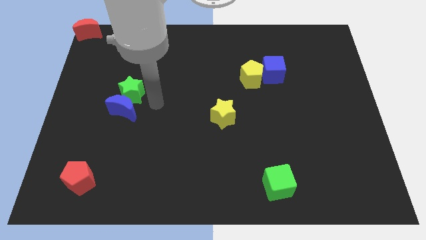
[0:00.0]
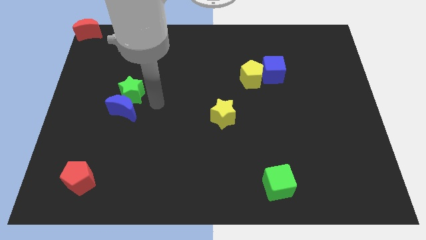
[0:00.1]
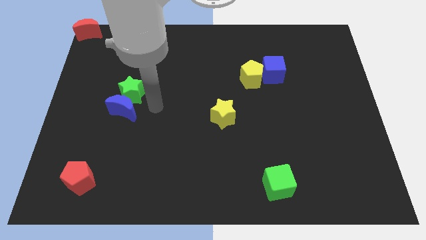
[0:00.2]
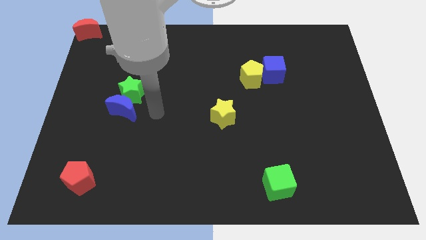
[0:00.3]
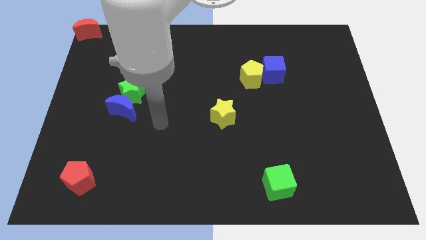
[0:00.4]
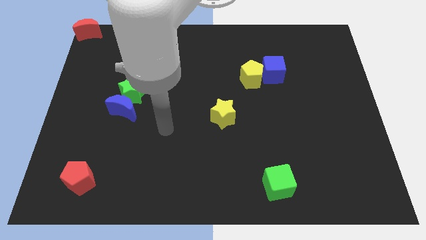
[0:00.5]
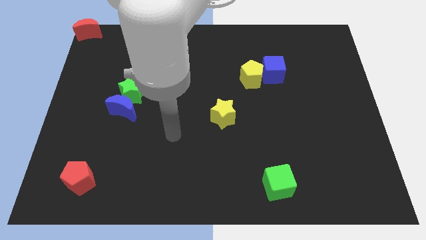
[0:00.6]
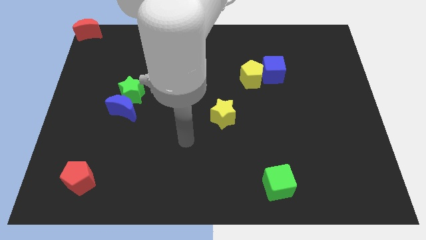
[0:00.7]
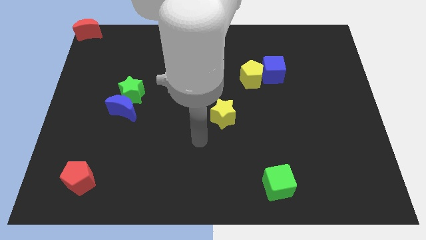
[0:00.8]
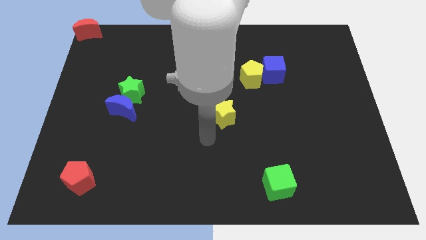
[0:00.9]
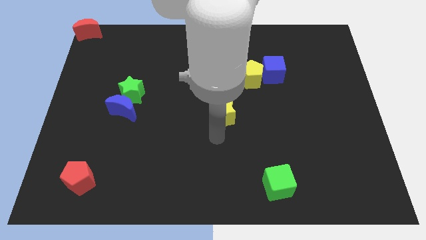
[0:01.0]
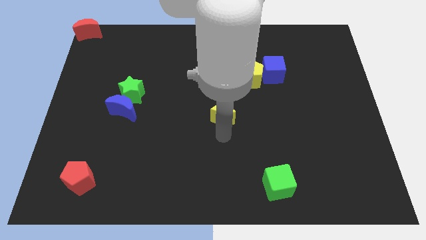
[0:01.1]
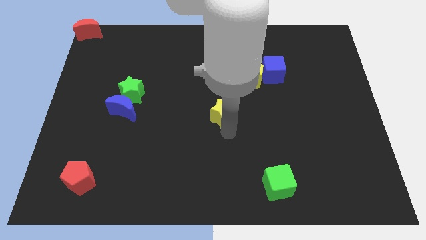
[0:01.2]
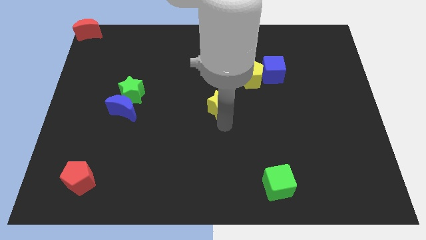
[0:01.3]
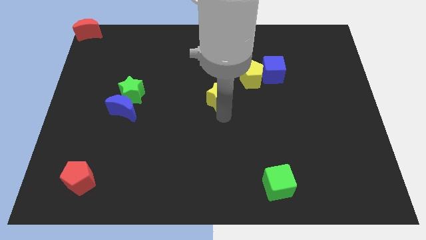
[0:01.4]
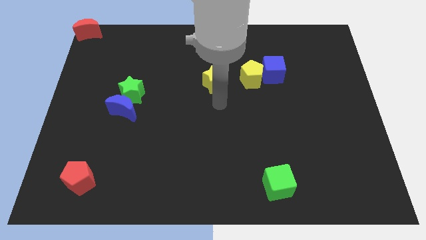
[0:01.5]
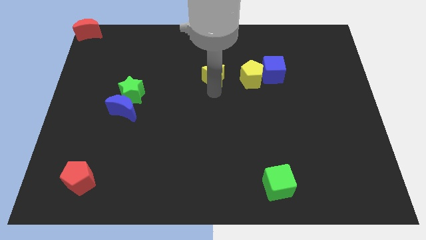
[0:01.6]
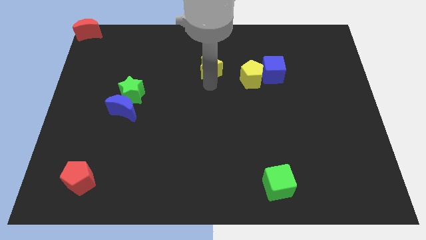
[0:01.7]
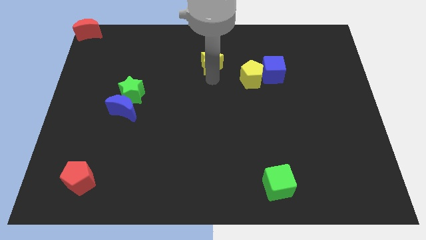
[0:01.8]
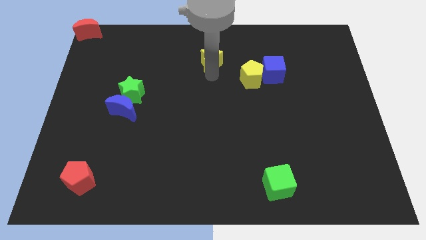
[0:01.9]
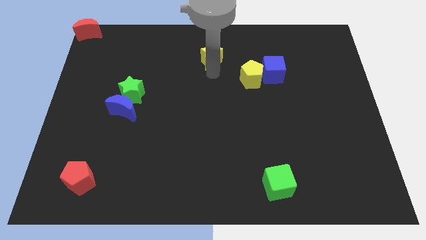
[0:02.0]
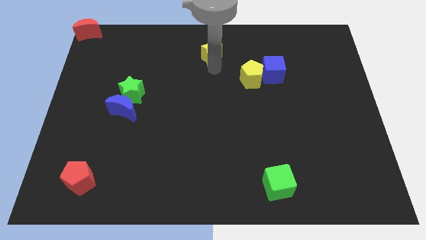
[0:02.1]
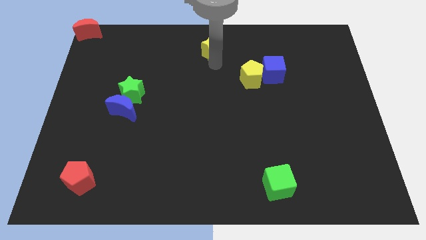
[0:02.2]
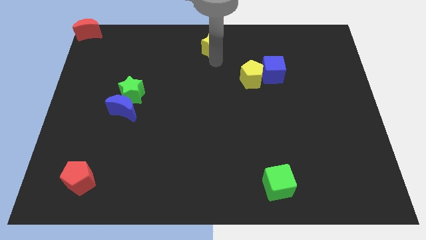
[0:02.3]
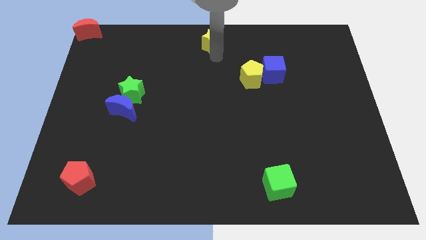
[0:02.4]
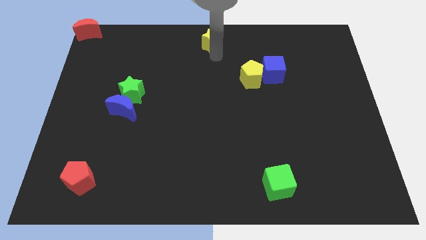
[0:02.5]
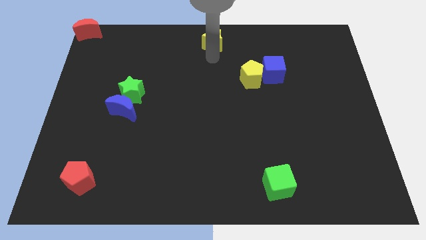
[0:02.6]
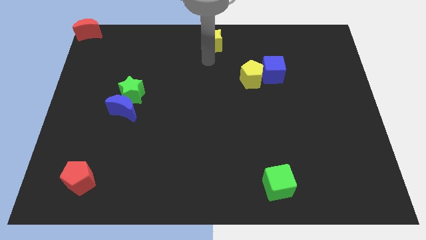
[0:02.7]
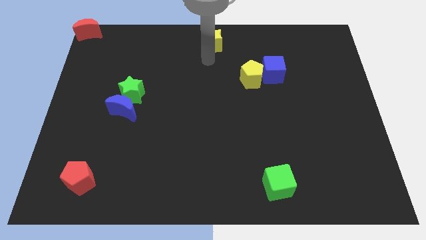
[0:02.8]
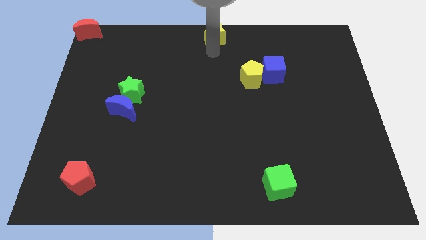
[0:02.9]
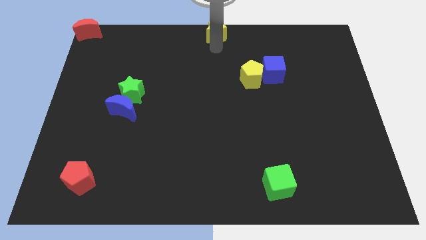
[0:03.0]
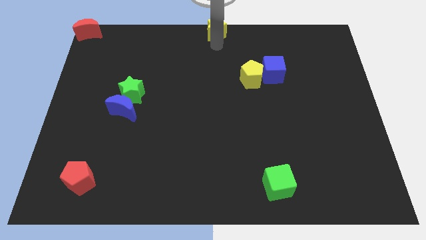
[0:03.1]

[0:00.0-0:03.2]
push the yellow star at the top center of the board

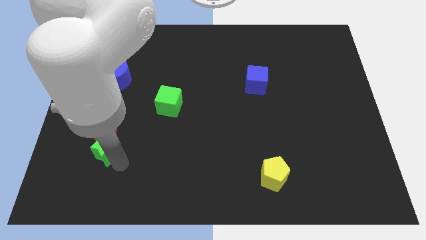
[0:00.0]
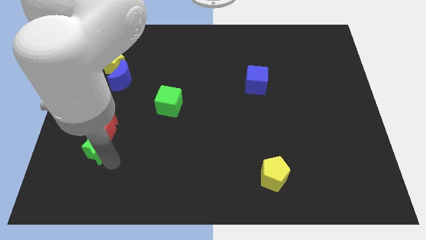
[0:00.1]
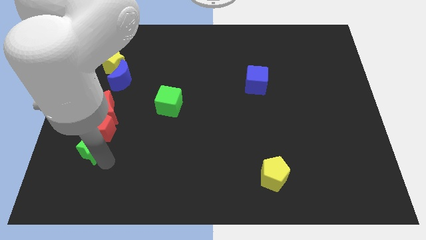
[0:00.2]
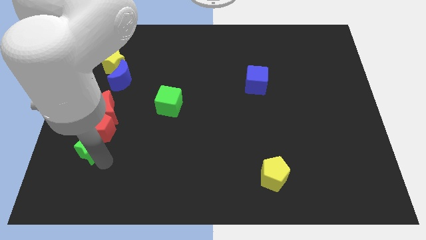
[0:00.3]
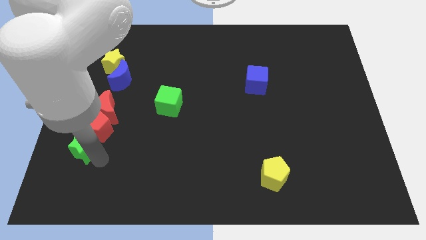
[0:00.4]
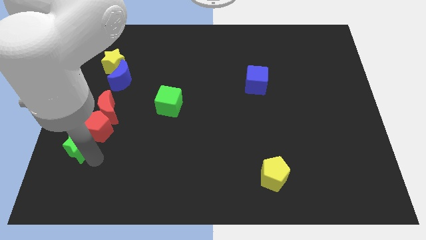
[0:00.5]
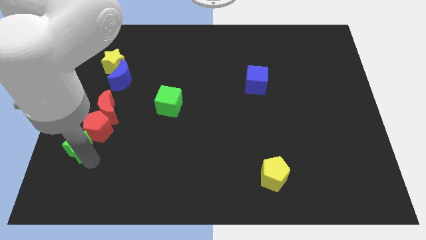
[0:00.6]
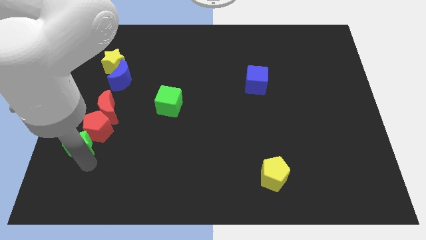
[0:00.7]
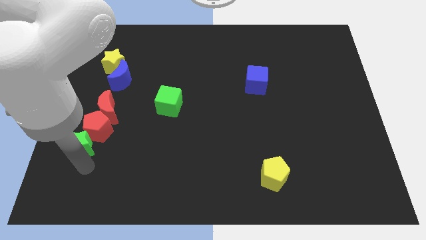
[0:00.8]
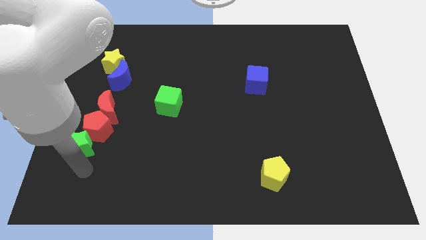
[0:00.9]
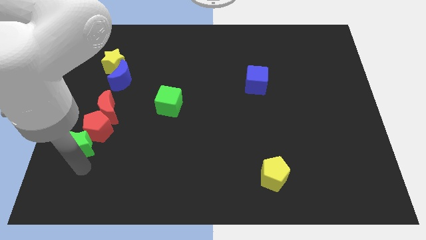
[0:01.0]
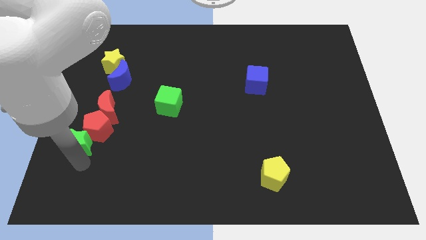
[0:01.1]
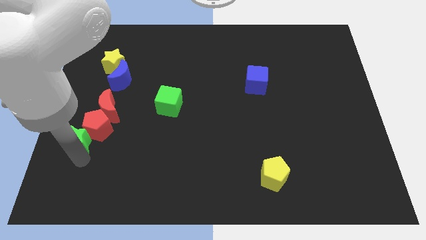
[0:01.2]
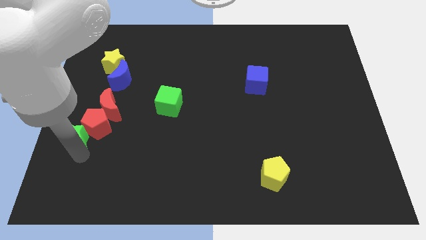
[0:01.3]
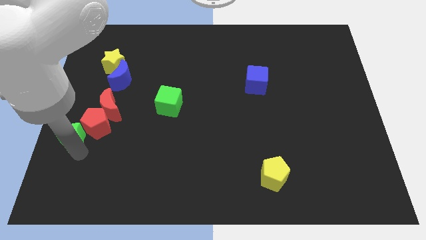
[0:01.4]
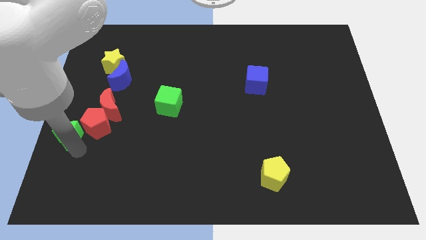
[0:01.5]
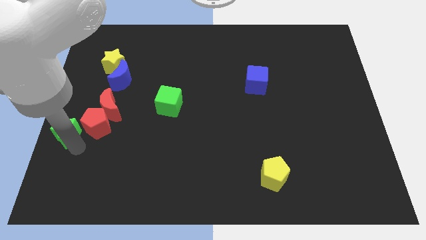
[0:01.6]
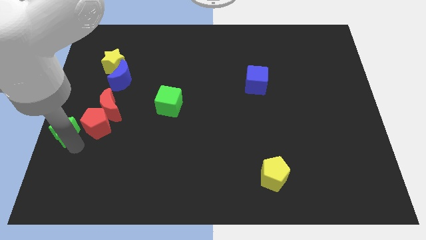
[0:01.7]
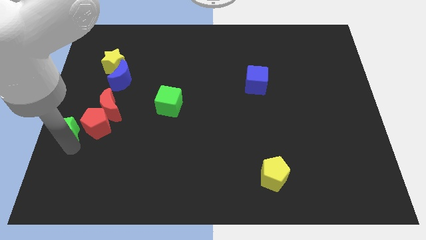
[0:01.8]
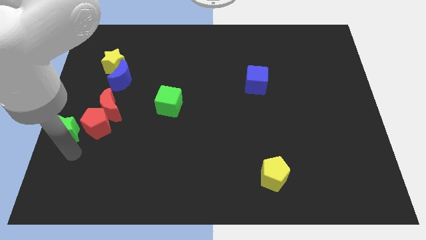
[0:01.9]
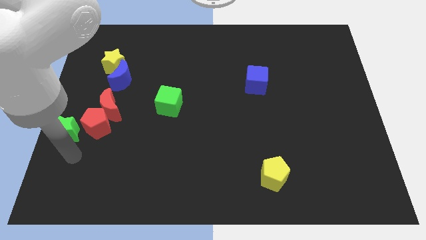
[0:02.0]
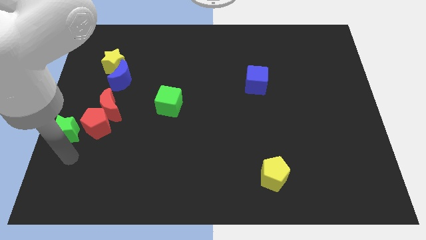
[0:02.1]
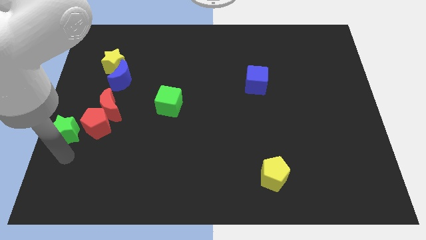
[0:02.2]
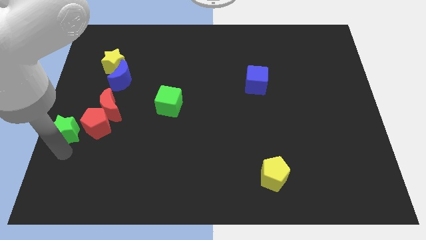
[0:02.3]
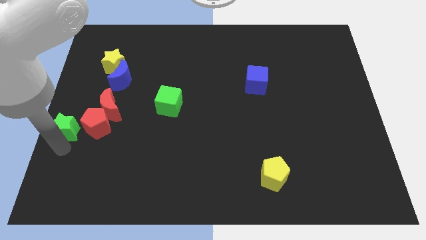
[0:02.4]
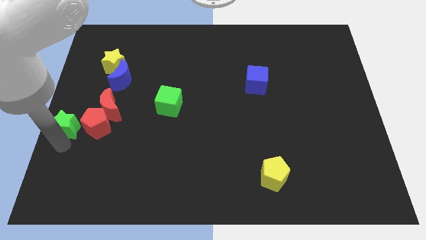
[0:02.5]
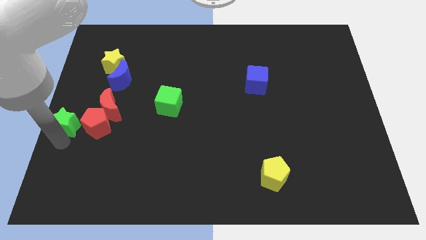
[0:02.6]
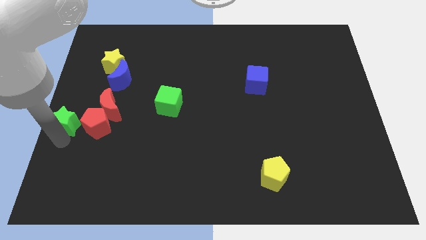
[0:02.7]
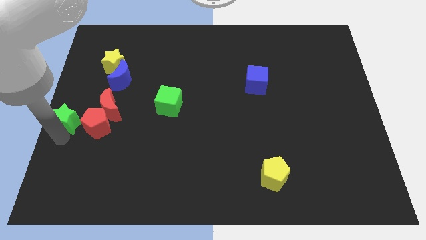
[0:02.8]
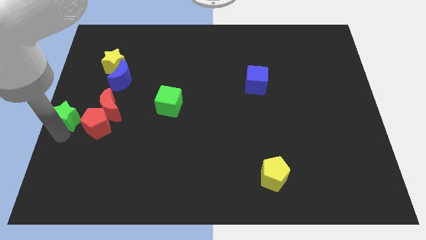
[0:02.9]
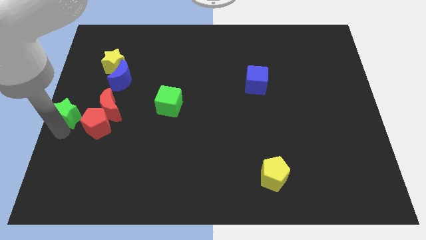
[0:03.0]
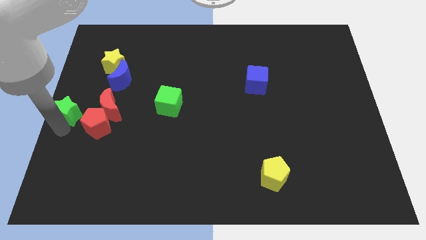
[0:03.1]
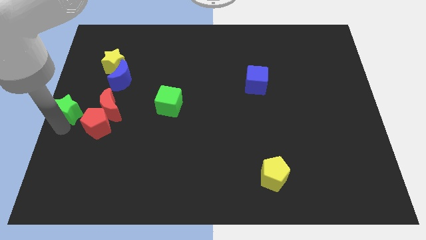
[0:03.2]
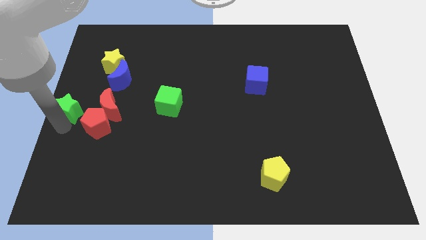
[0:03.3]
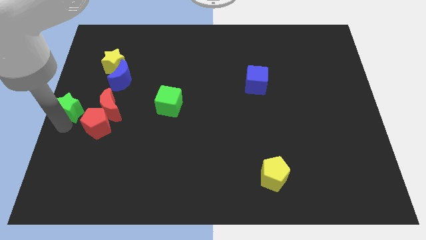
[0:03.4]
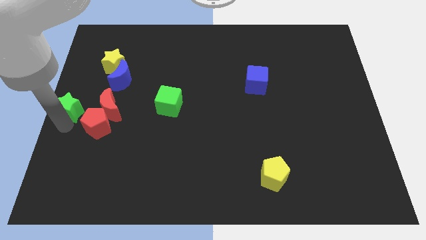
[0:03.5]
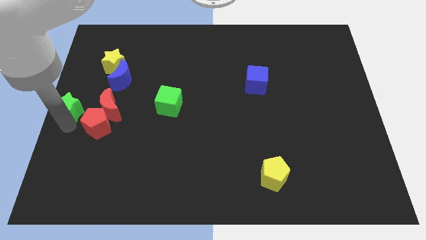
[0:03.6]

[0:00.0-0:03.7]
move the green star to the center left of the board

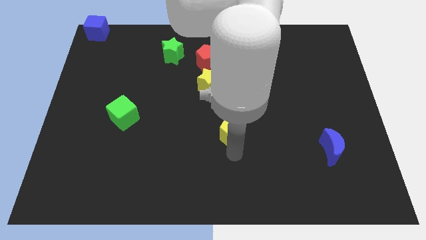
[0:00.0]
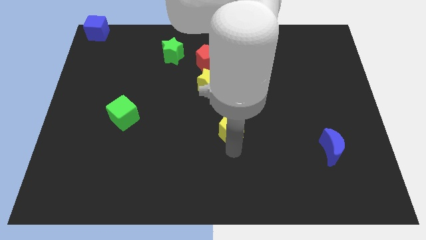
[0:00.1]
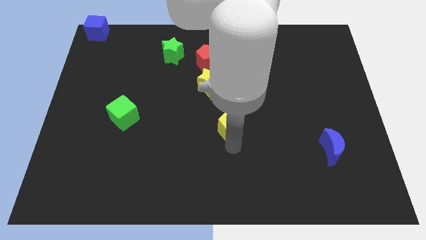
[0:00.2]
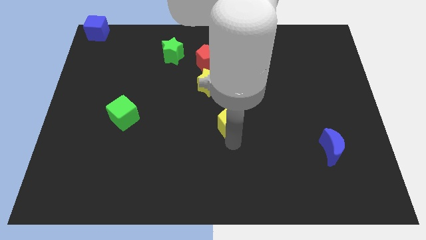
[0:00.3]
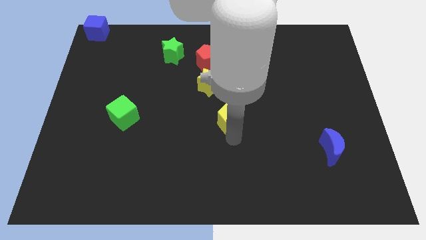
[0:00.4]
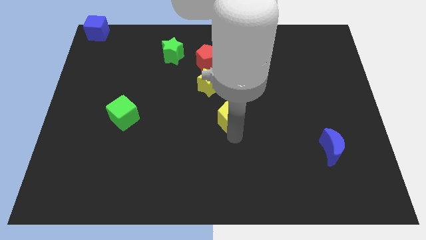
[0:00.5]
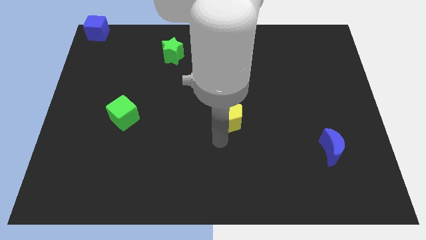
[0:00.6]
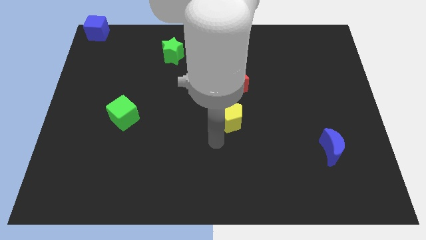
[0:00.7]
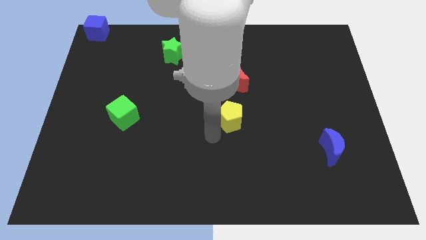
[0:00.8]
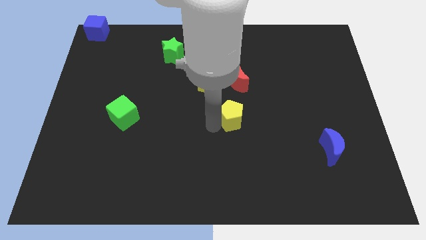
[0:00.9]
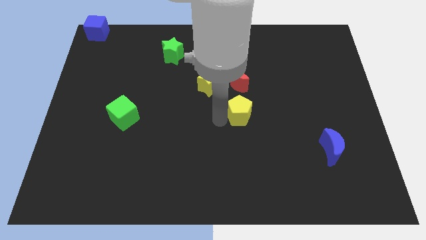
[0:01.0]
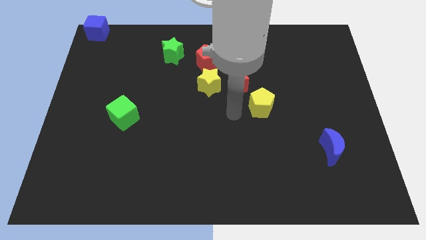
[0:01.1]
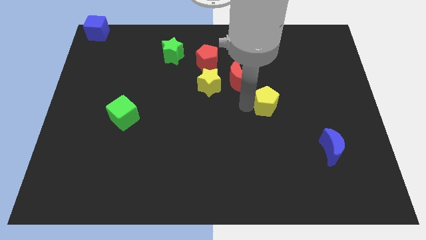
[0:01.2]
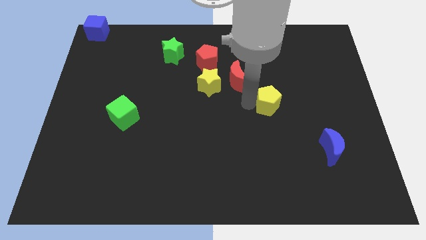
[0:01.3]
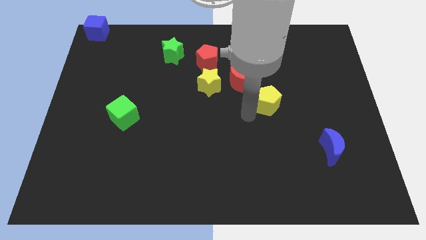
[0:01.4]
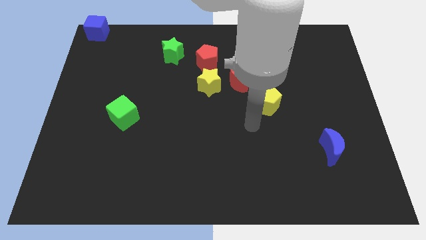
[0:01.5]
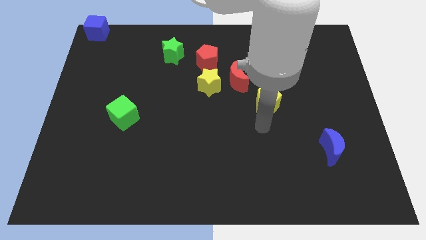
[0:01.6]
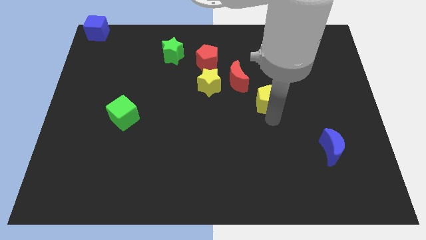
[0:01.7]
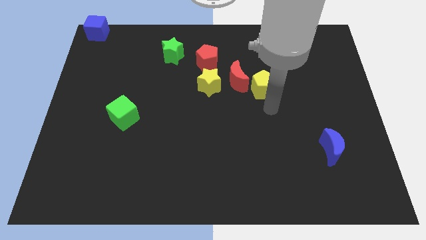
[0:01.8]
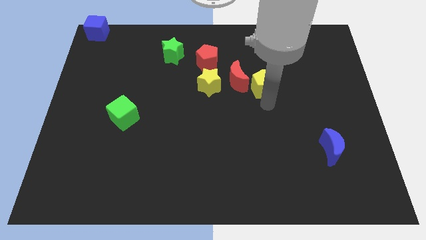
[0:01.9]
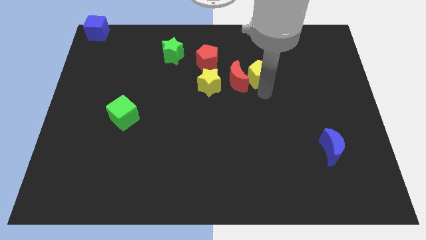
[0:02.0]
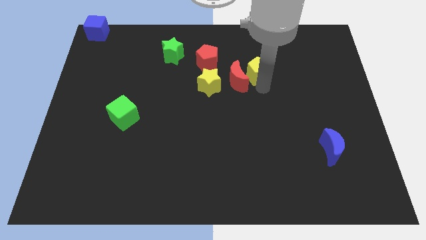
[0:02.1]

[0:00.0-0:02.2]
put the yellow pentagon right to the red moon
